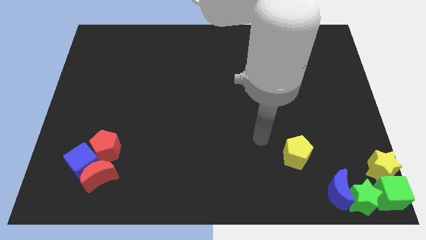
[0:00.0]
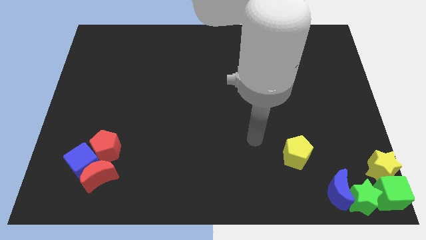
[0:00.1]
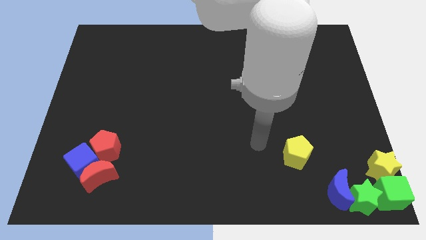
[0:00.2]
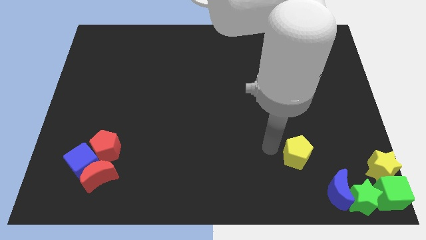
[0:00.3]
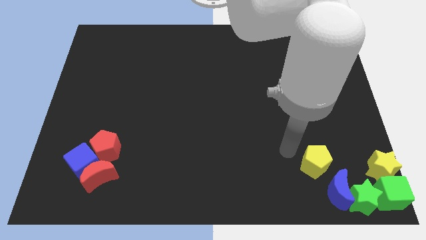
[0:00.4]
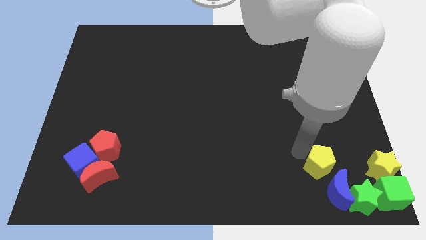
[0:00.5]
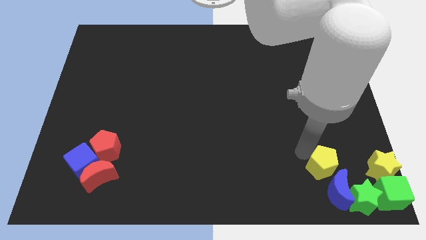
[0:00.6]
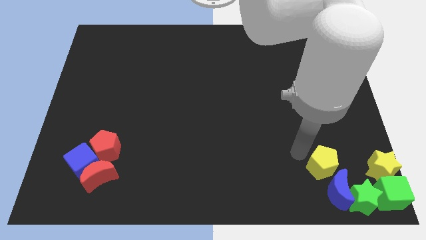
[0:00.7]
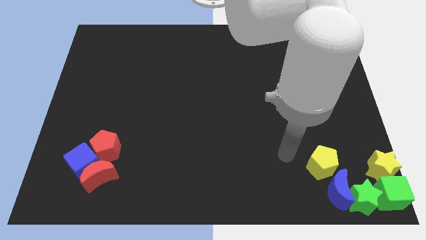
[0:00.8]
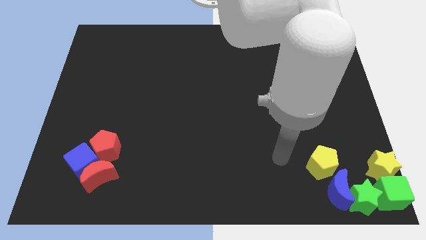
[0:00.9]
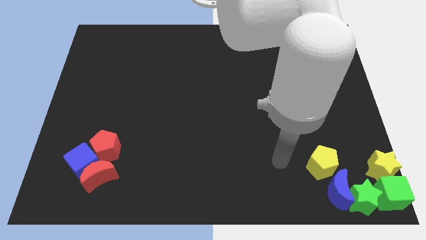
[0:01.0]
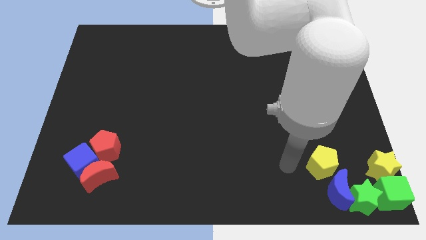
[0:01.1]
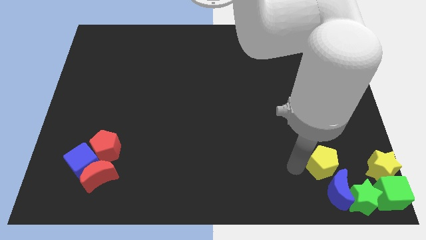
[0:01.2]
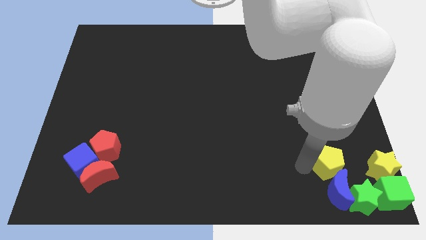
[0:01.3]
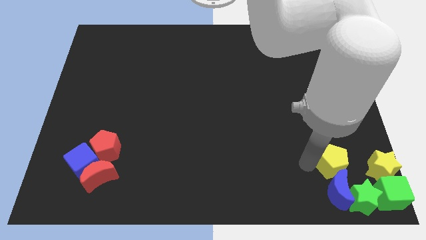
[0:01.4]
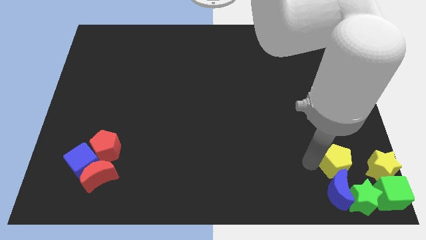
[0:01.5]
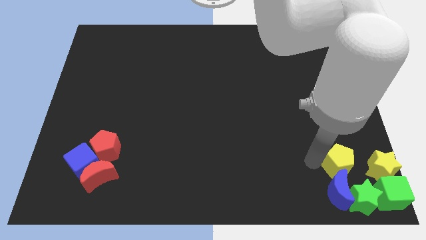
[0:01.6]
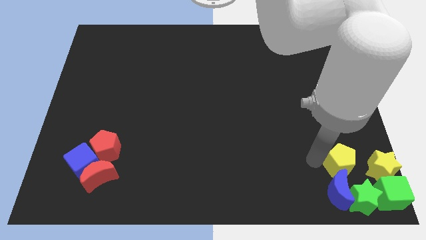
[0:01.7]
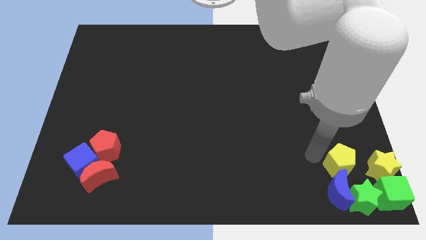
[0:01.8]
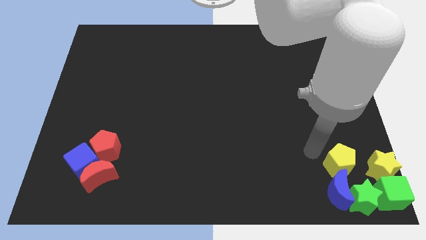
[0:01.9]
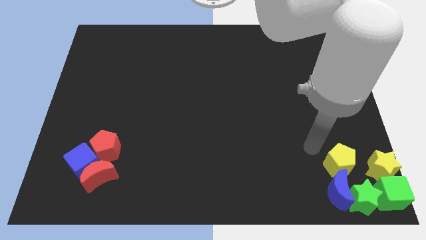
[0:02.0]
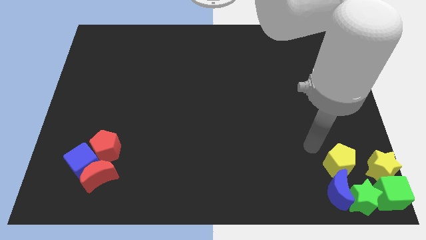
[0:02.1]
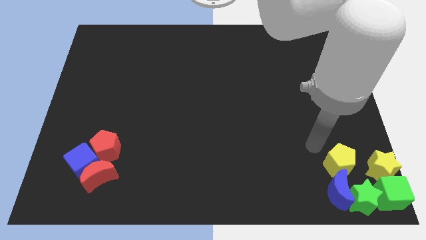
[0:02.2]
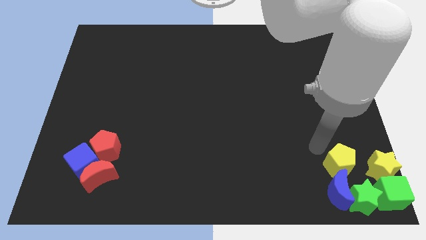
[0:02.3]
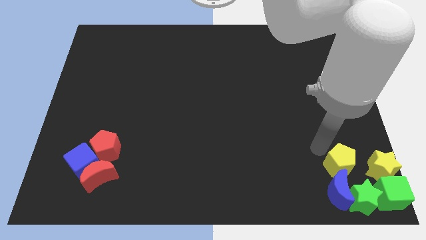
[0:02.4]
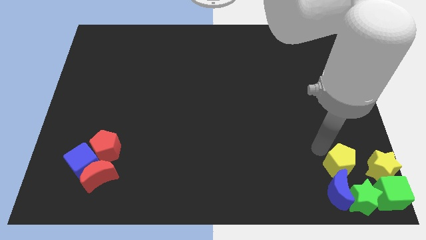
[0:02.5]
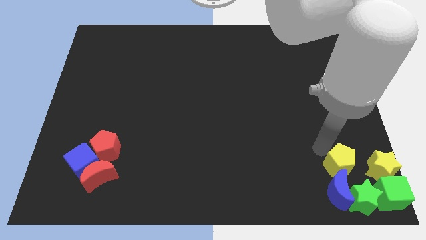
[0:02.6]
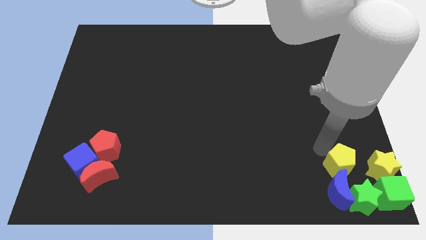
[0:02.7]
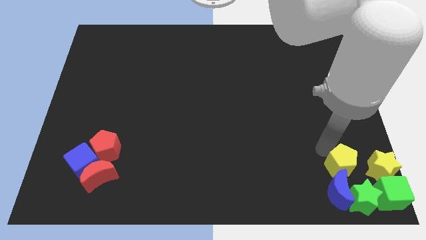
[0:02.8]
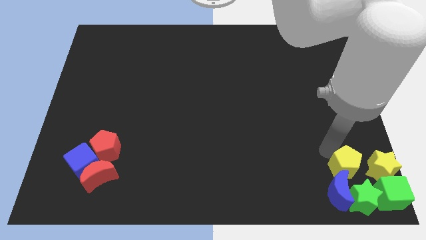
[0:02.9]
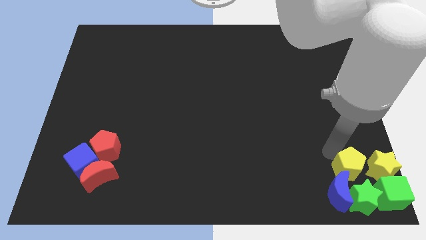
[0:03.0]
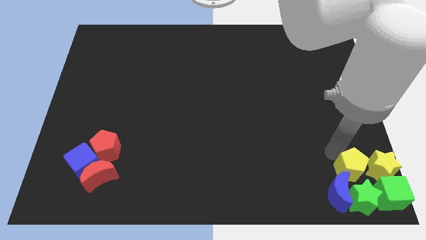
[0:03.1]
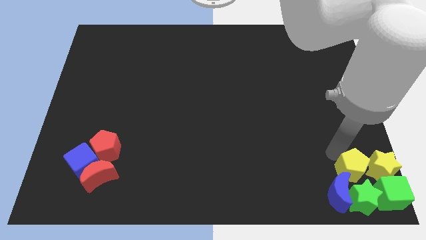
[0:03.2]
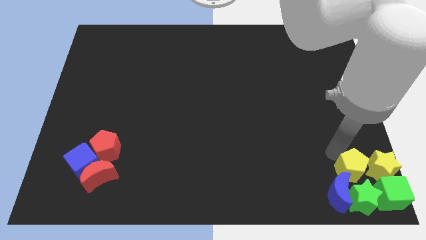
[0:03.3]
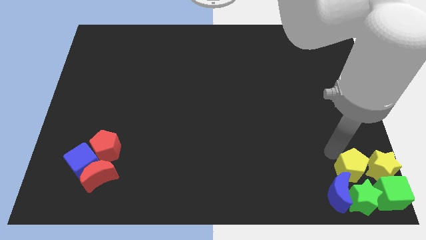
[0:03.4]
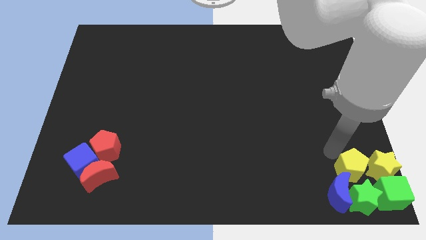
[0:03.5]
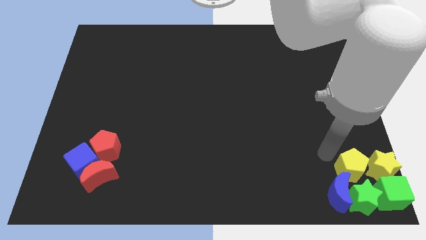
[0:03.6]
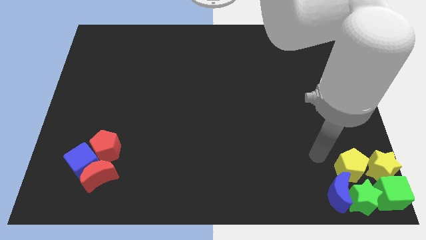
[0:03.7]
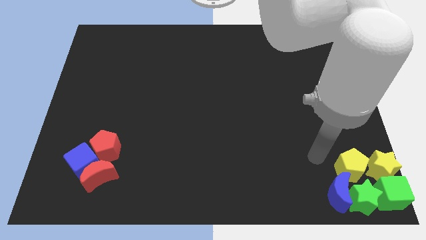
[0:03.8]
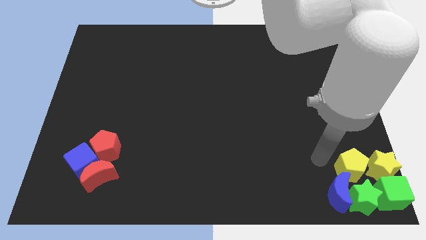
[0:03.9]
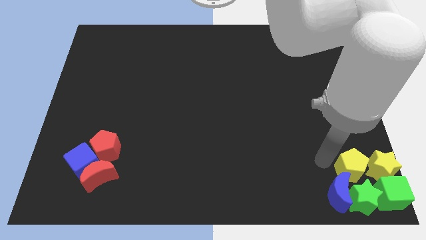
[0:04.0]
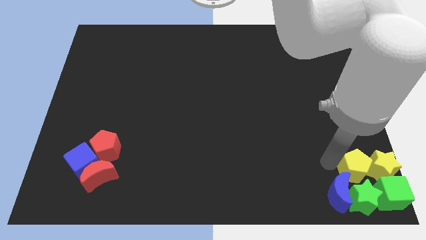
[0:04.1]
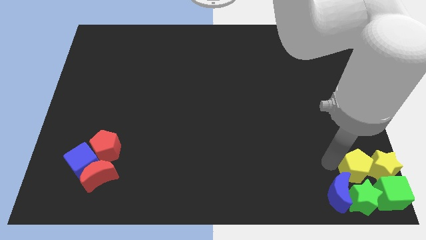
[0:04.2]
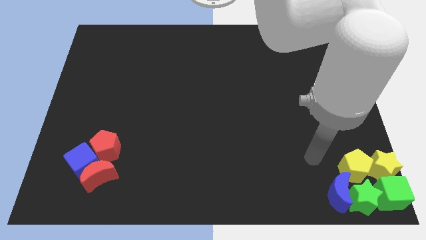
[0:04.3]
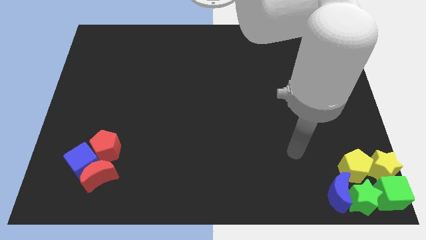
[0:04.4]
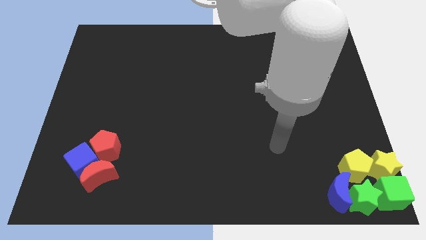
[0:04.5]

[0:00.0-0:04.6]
place the yellow pentagon left to the yellow star

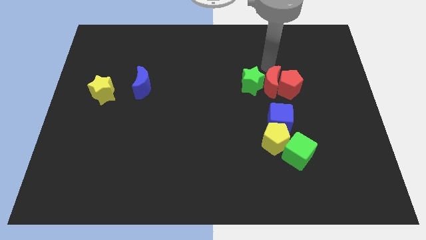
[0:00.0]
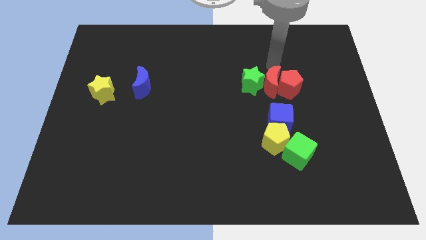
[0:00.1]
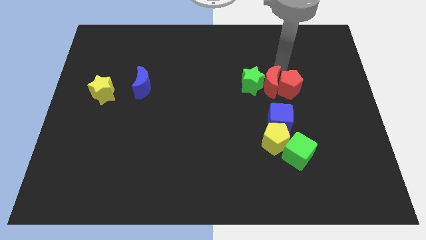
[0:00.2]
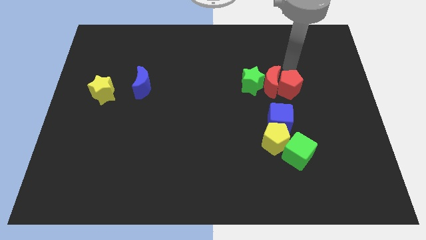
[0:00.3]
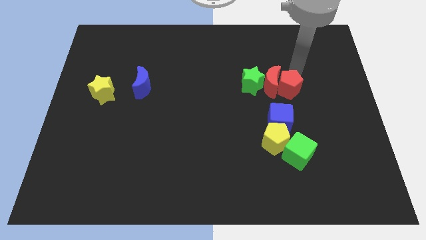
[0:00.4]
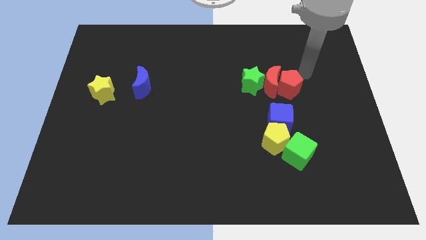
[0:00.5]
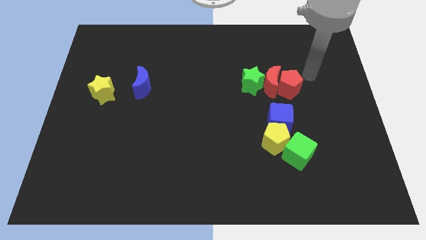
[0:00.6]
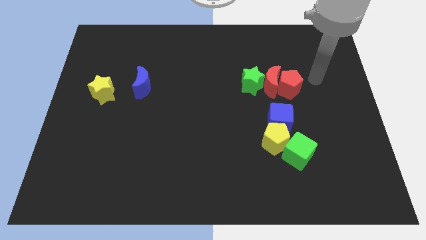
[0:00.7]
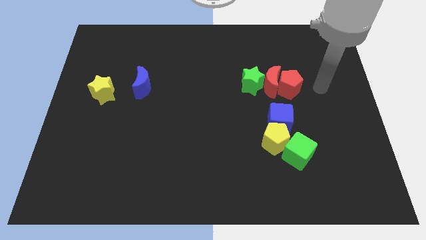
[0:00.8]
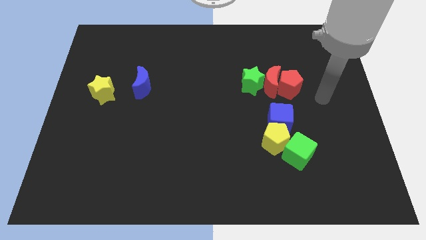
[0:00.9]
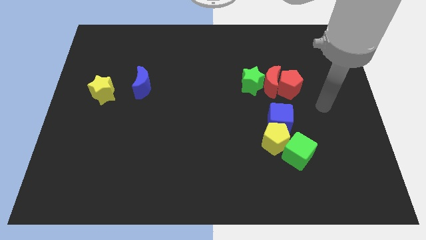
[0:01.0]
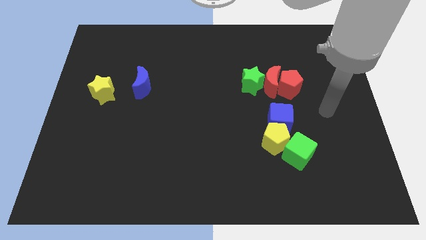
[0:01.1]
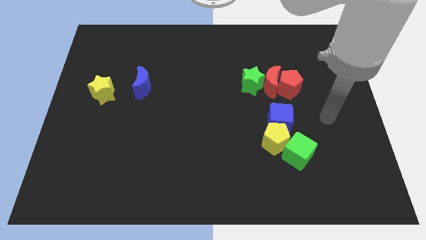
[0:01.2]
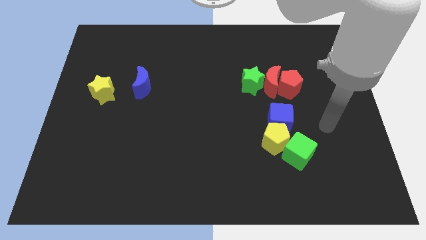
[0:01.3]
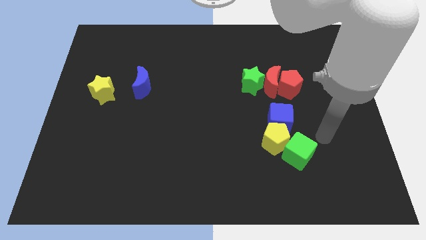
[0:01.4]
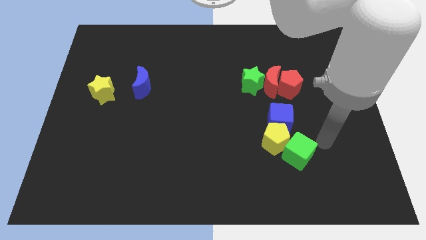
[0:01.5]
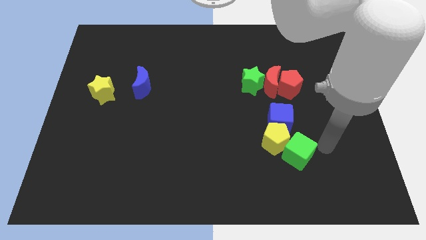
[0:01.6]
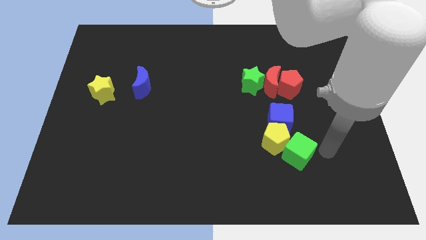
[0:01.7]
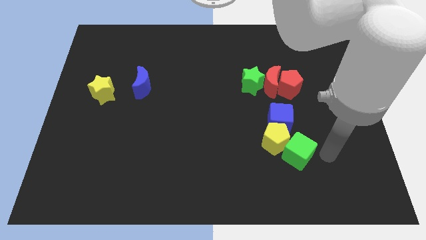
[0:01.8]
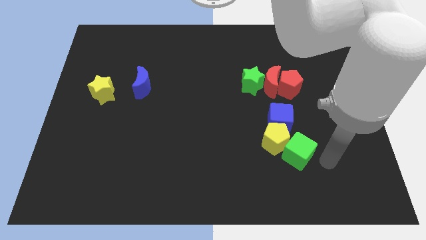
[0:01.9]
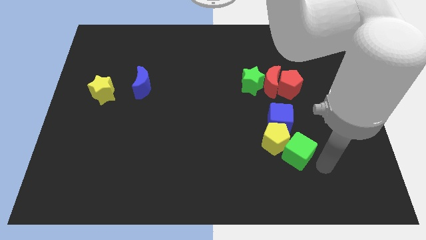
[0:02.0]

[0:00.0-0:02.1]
move the arm to the right of the green cube

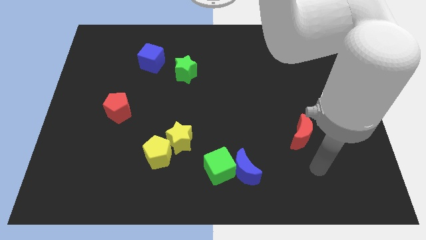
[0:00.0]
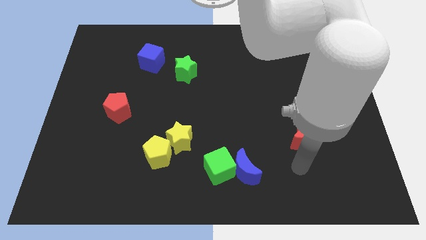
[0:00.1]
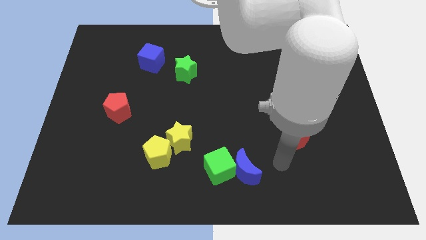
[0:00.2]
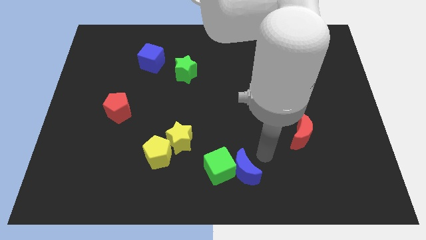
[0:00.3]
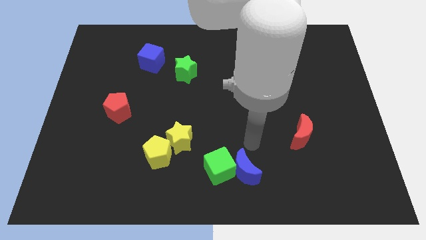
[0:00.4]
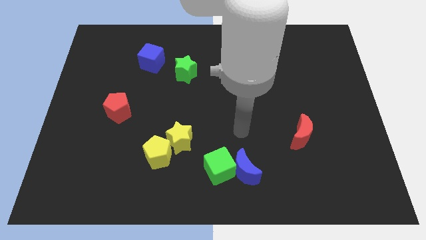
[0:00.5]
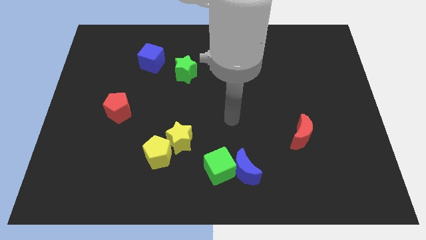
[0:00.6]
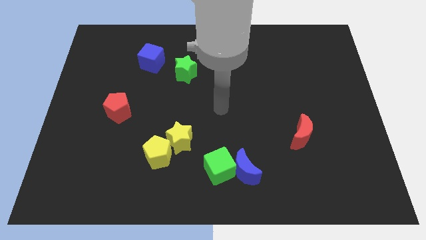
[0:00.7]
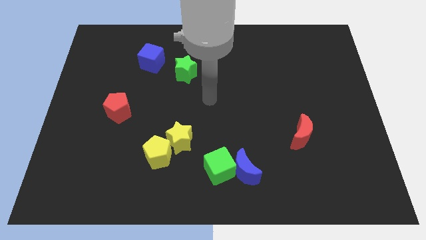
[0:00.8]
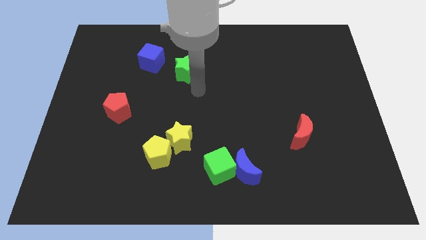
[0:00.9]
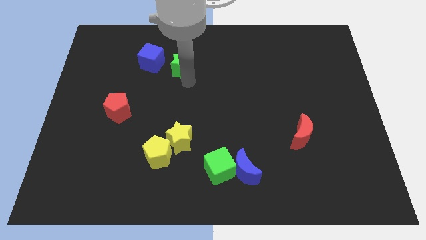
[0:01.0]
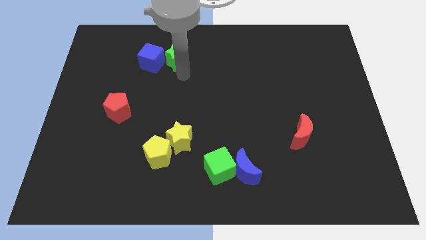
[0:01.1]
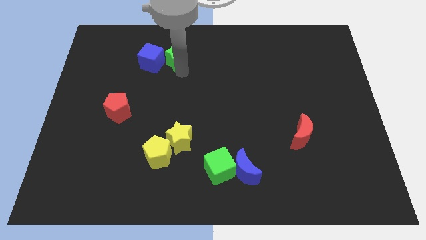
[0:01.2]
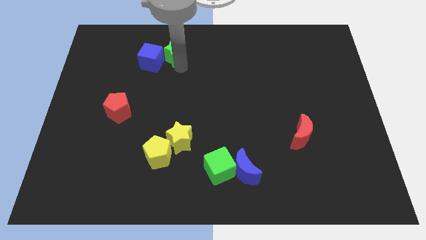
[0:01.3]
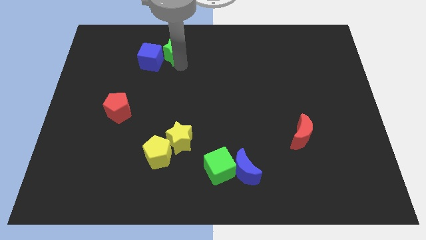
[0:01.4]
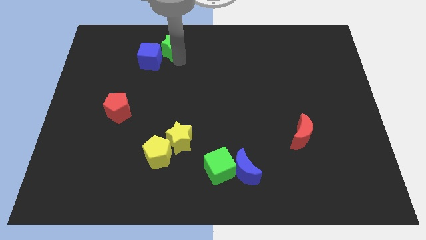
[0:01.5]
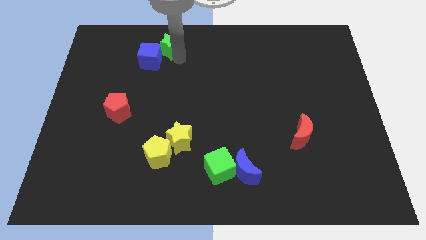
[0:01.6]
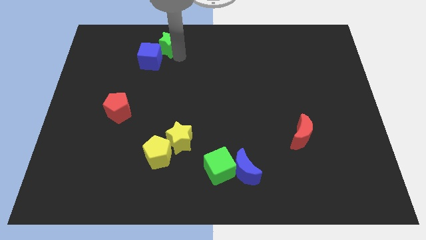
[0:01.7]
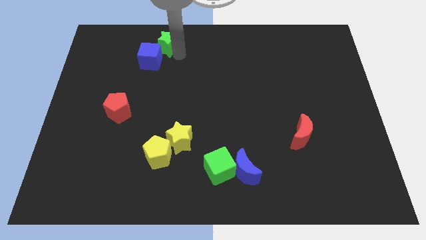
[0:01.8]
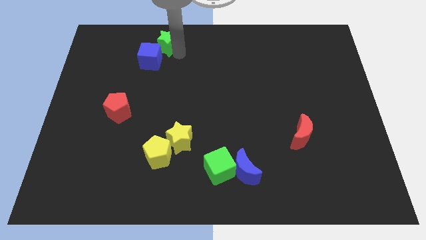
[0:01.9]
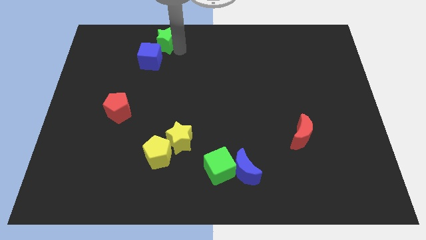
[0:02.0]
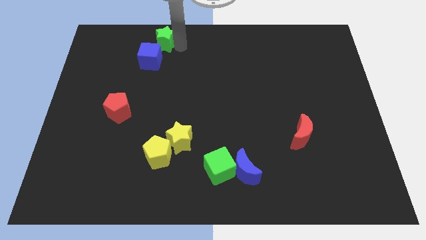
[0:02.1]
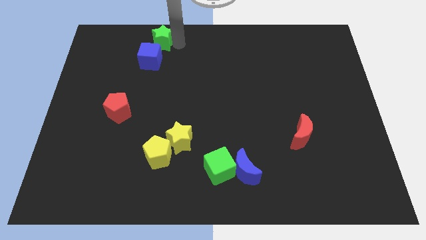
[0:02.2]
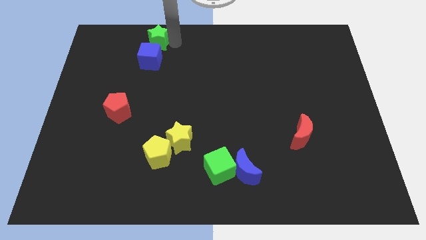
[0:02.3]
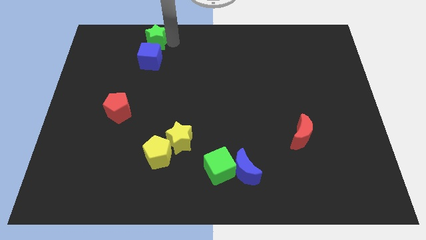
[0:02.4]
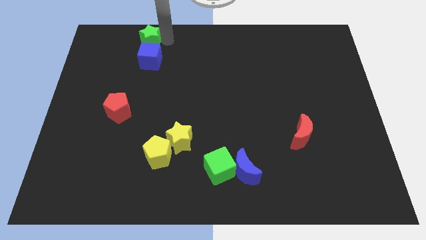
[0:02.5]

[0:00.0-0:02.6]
place the green star above the blue cube
